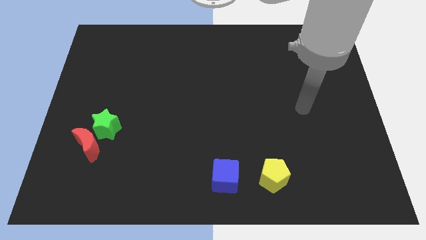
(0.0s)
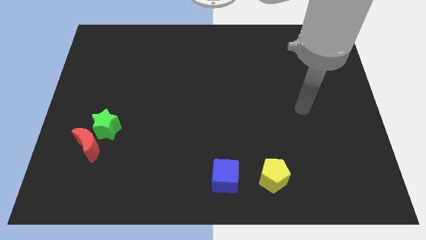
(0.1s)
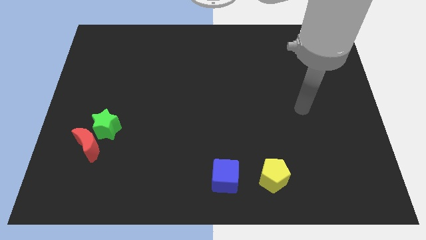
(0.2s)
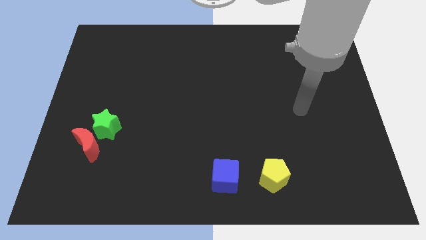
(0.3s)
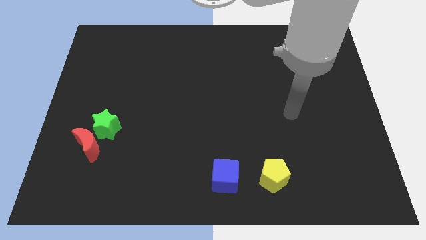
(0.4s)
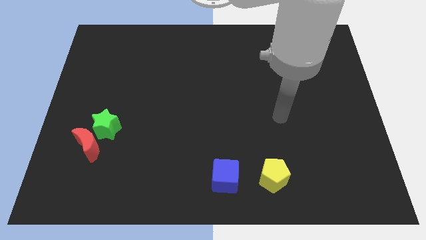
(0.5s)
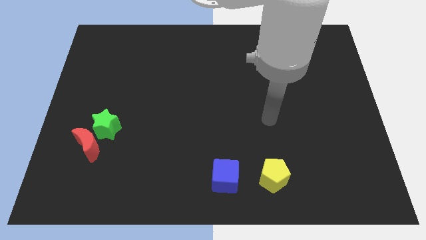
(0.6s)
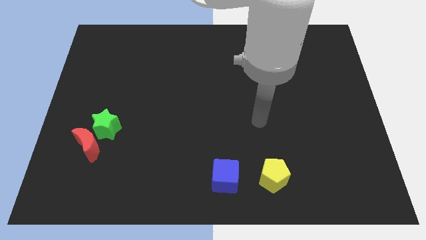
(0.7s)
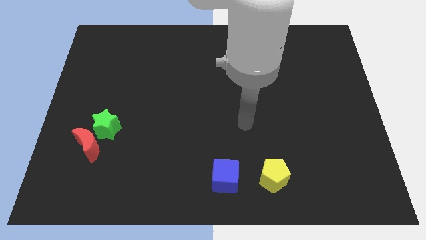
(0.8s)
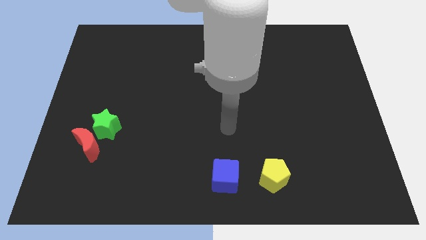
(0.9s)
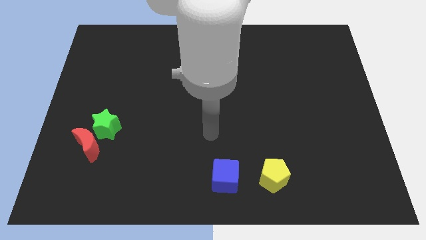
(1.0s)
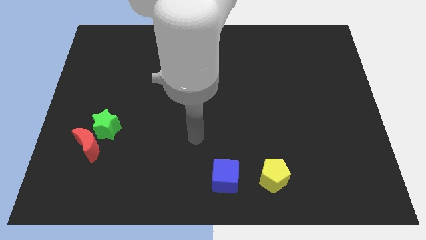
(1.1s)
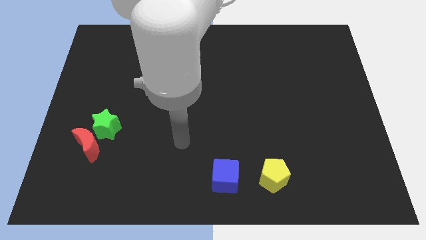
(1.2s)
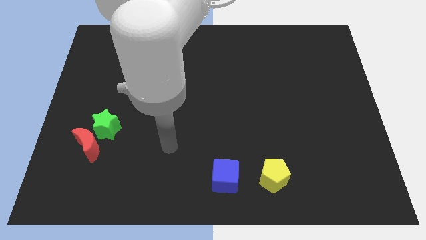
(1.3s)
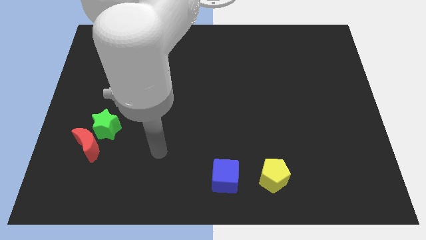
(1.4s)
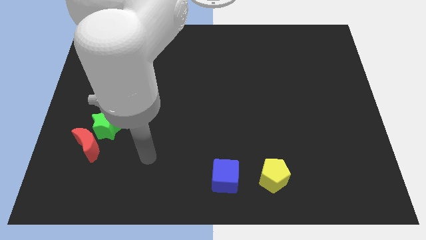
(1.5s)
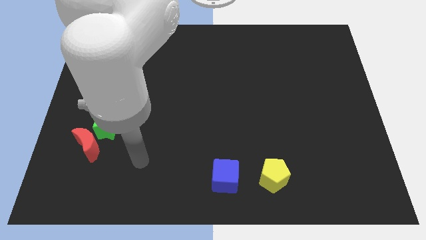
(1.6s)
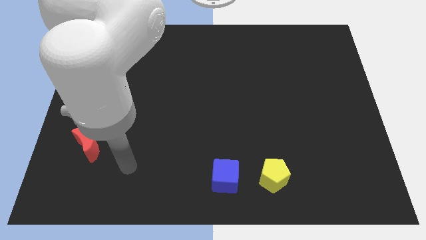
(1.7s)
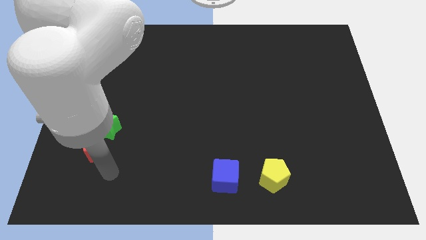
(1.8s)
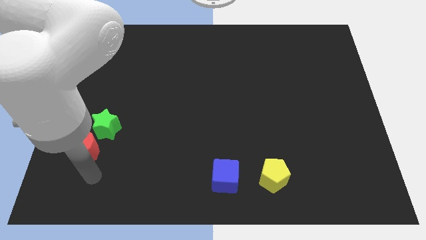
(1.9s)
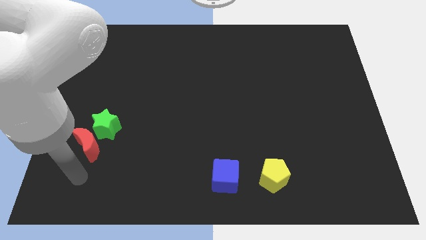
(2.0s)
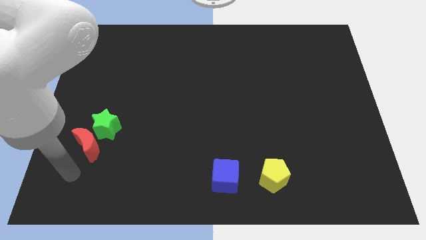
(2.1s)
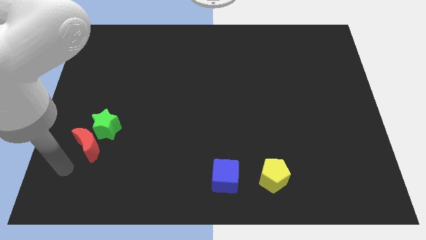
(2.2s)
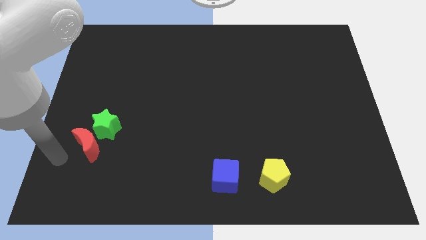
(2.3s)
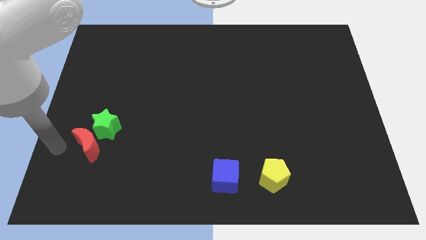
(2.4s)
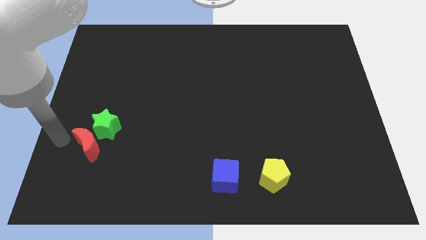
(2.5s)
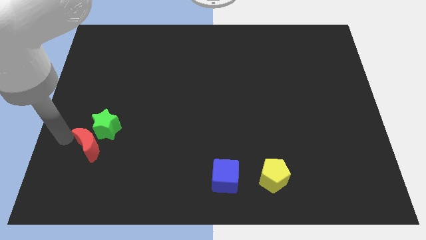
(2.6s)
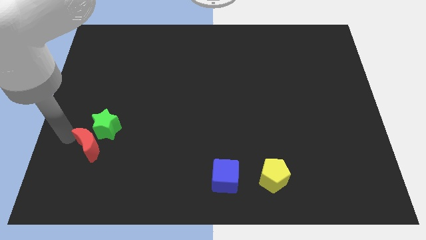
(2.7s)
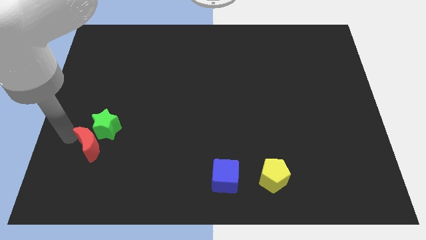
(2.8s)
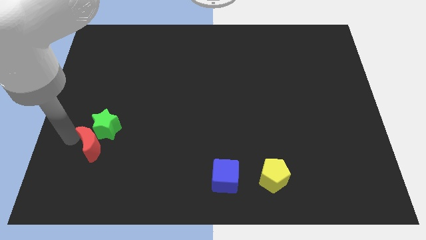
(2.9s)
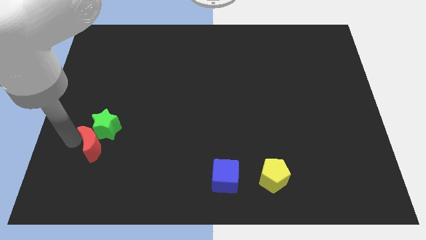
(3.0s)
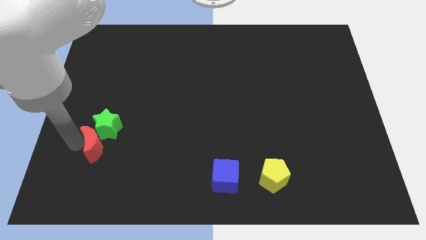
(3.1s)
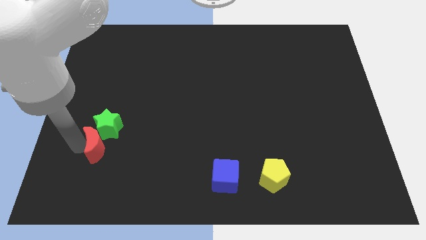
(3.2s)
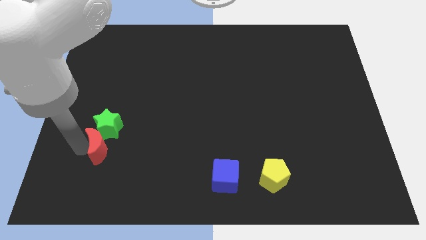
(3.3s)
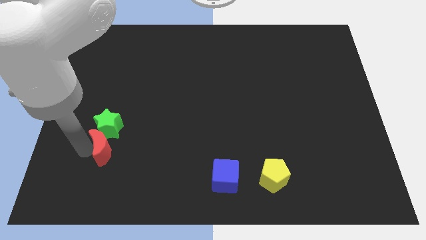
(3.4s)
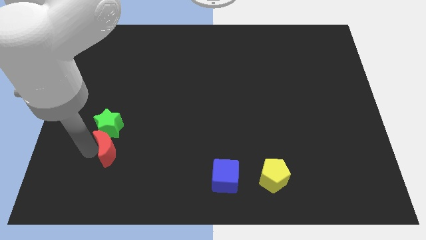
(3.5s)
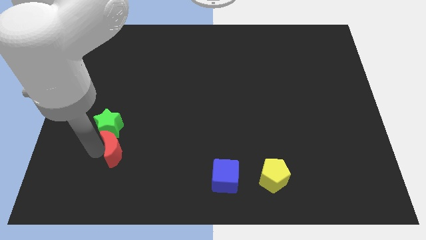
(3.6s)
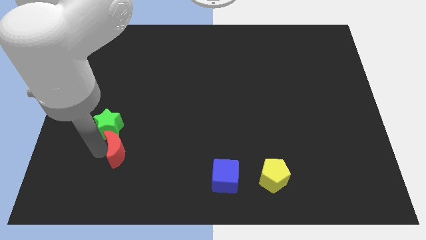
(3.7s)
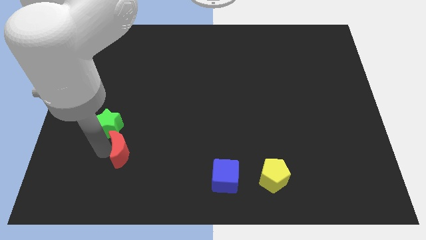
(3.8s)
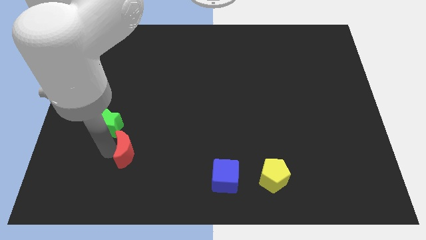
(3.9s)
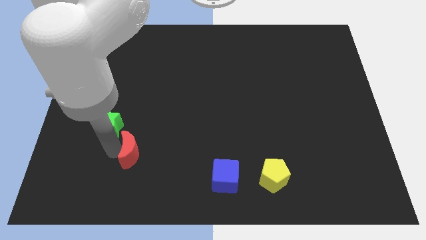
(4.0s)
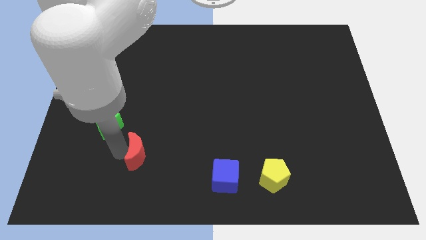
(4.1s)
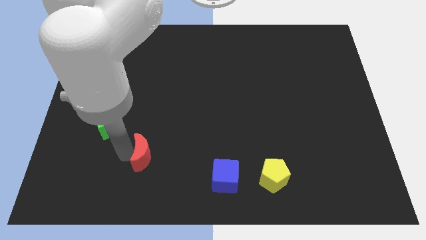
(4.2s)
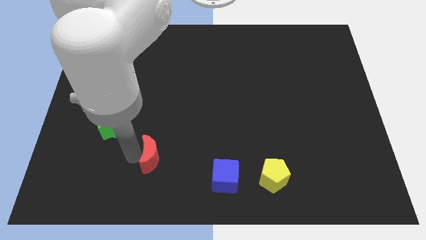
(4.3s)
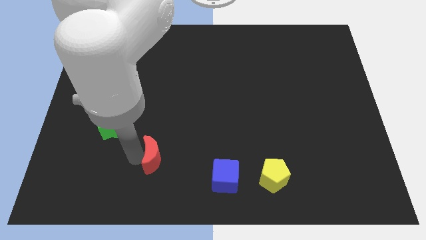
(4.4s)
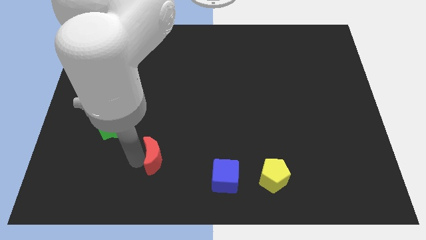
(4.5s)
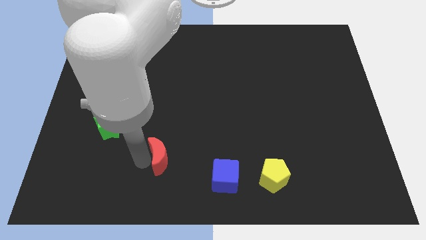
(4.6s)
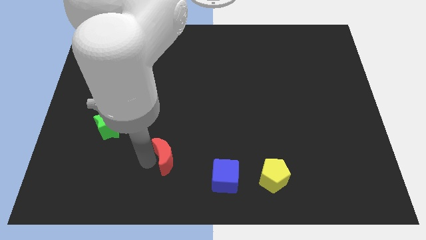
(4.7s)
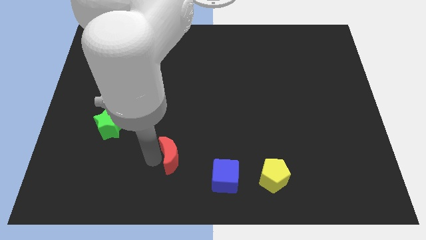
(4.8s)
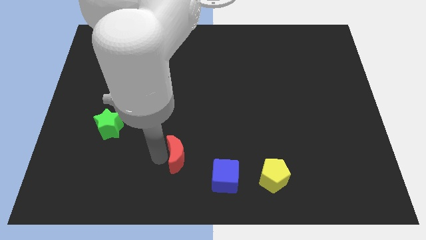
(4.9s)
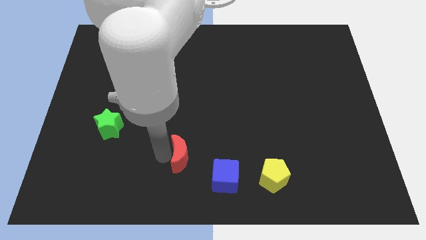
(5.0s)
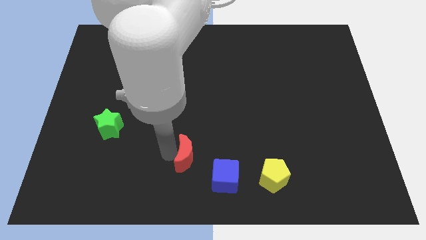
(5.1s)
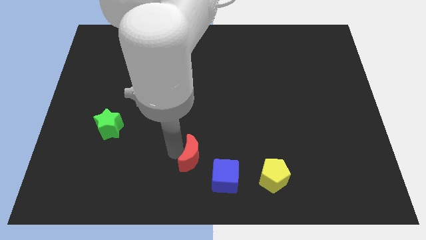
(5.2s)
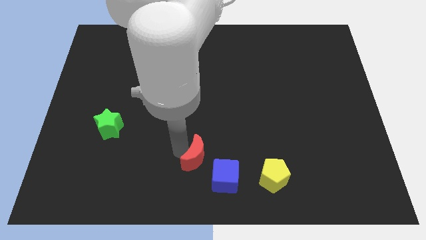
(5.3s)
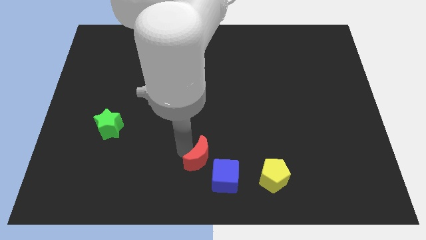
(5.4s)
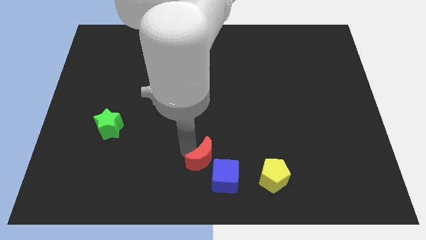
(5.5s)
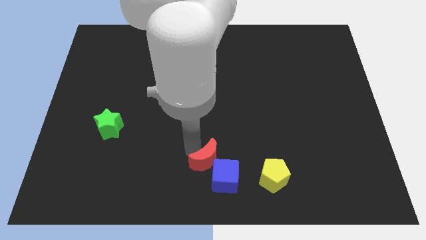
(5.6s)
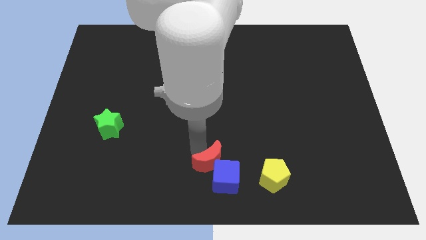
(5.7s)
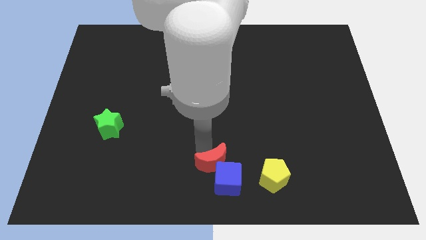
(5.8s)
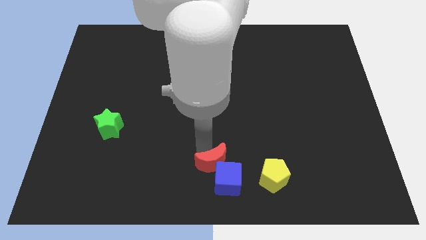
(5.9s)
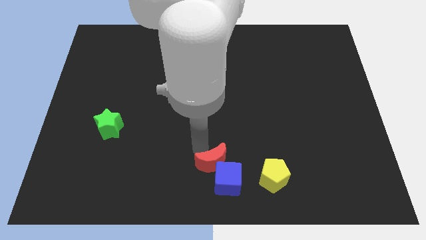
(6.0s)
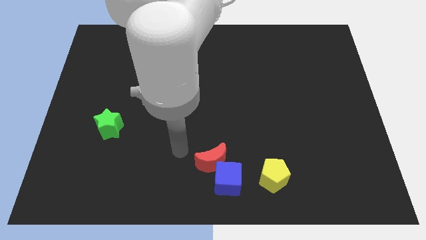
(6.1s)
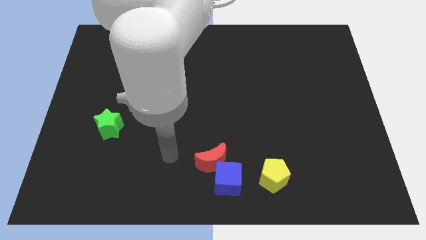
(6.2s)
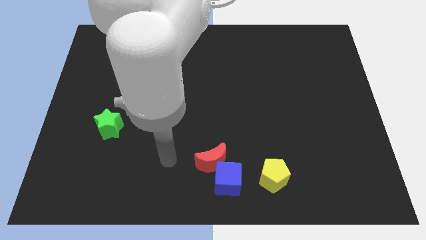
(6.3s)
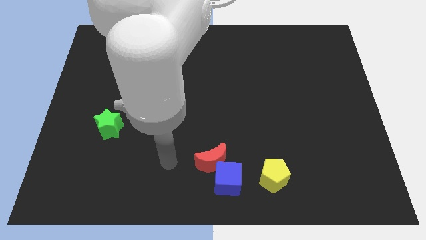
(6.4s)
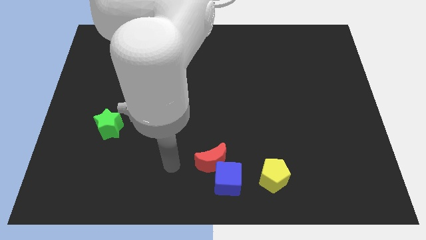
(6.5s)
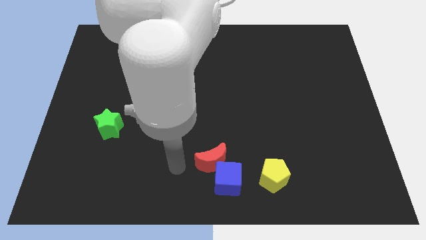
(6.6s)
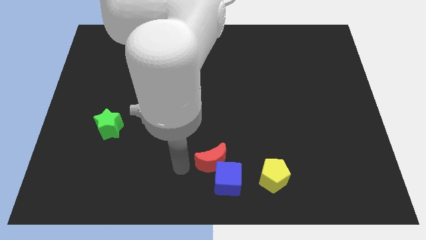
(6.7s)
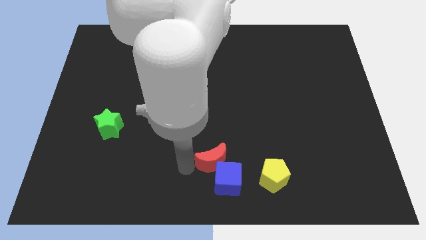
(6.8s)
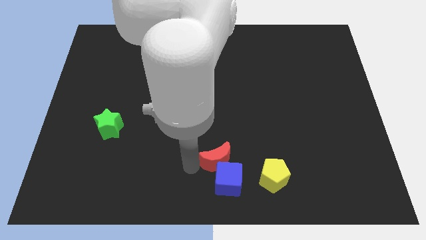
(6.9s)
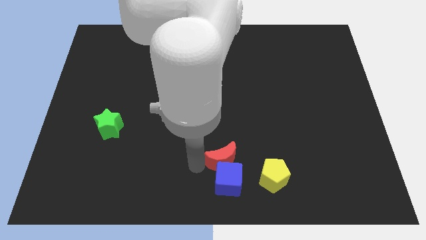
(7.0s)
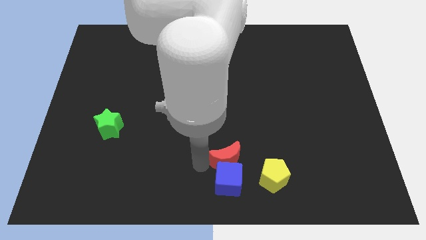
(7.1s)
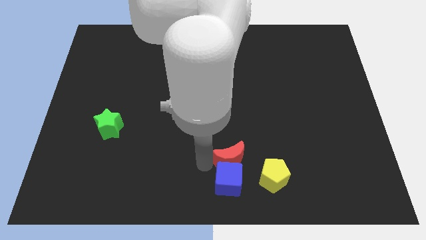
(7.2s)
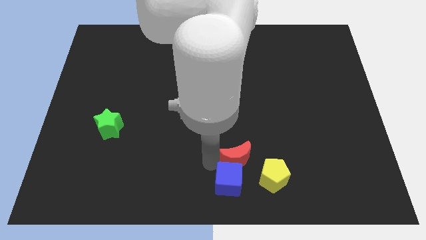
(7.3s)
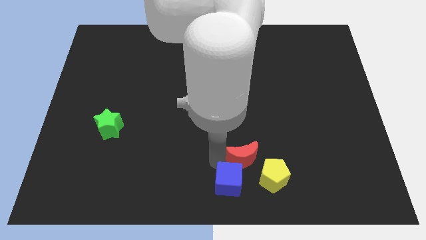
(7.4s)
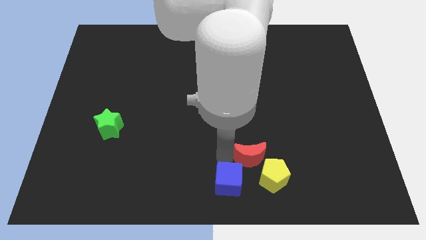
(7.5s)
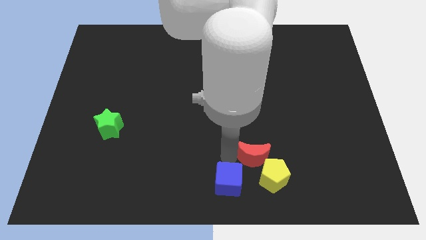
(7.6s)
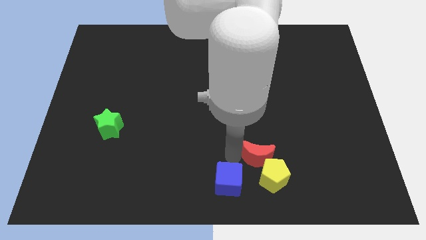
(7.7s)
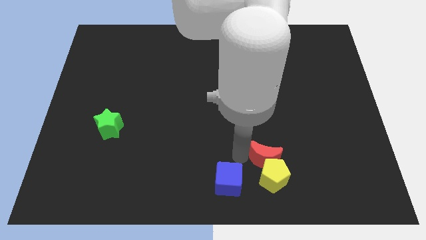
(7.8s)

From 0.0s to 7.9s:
move the moon next to the yellow pentagon

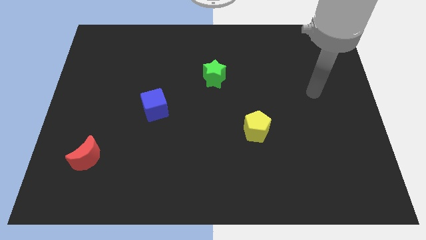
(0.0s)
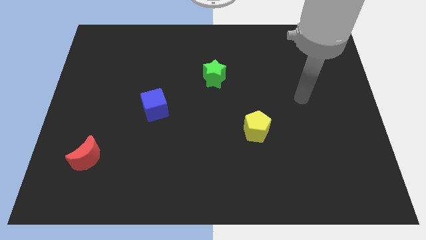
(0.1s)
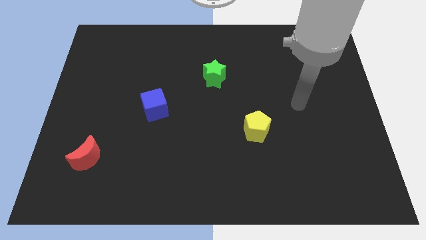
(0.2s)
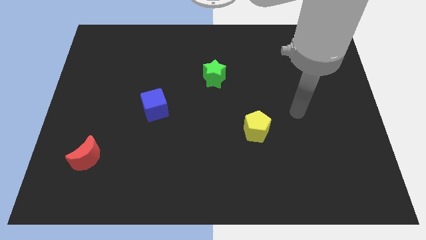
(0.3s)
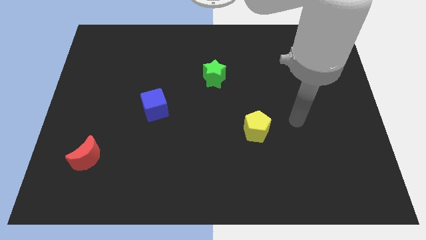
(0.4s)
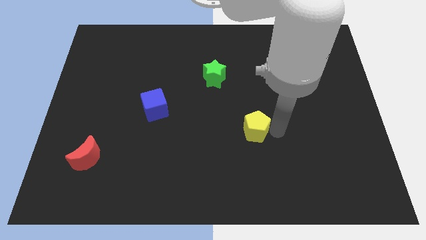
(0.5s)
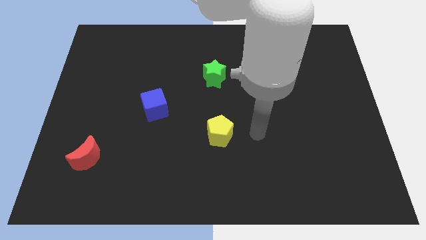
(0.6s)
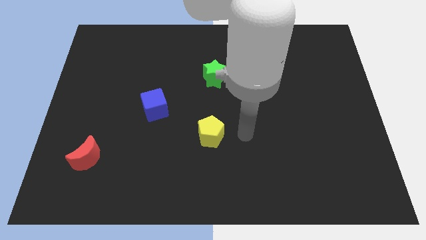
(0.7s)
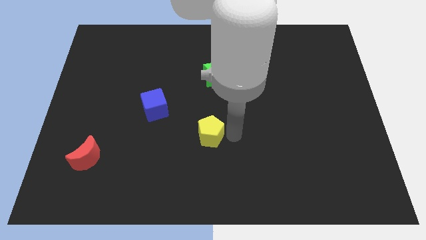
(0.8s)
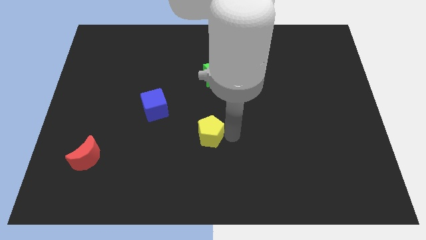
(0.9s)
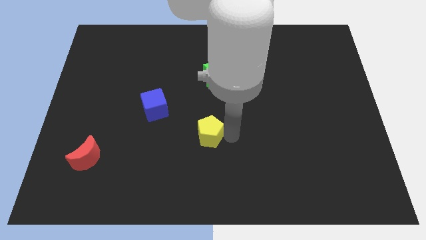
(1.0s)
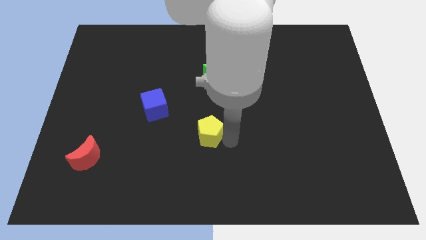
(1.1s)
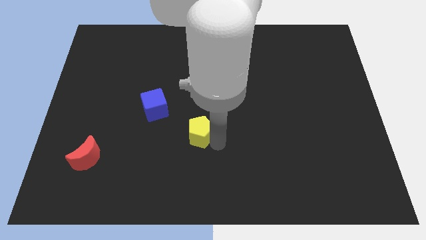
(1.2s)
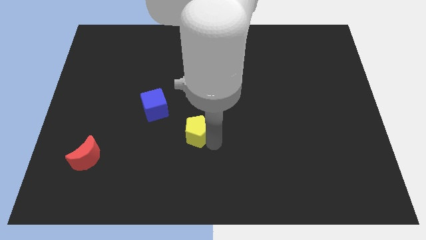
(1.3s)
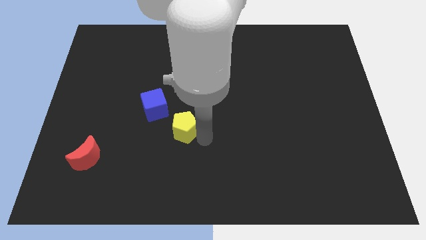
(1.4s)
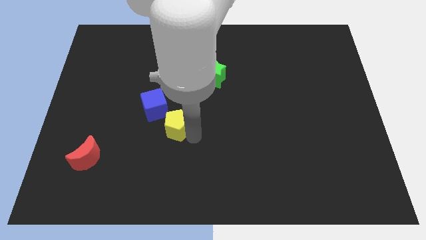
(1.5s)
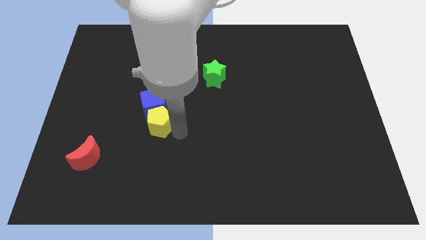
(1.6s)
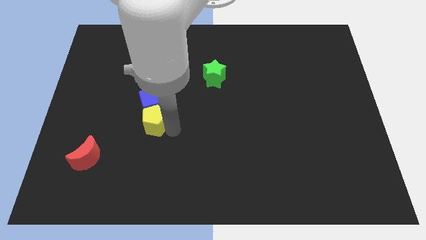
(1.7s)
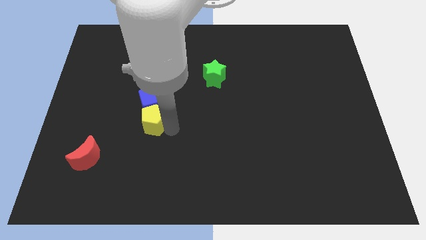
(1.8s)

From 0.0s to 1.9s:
slide the yellow block to the cube
